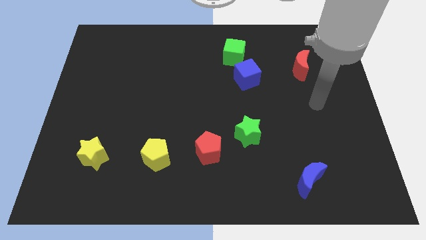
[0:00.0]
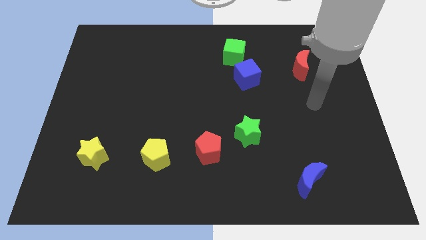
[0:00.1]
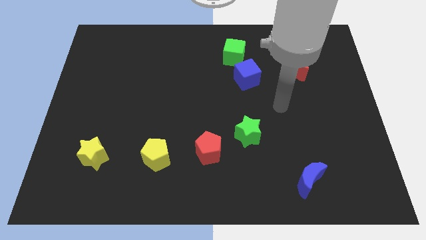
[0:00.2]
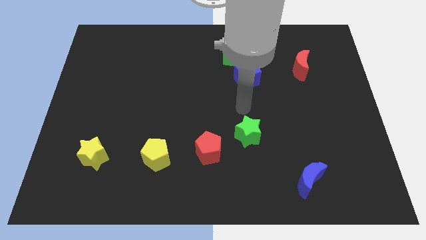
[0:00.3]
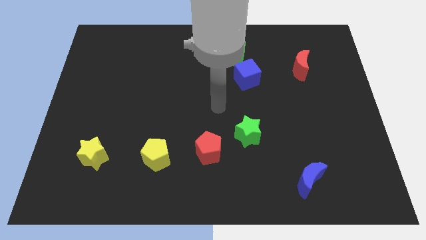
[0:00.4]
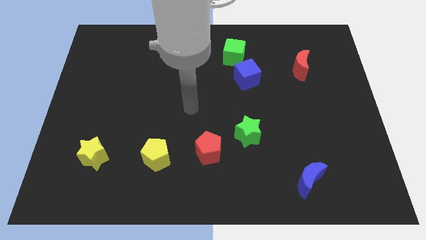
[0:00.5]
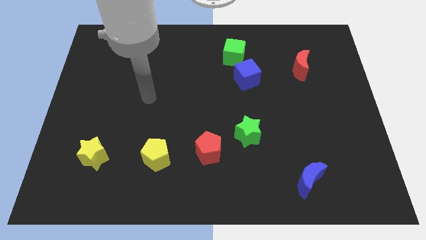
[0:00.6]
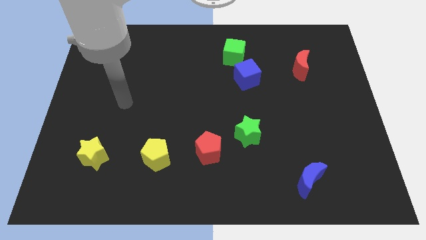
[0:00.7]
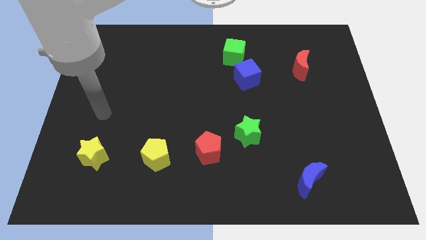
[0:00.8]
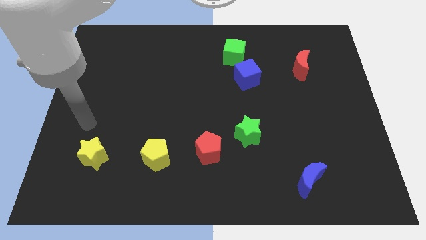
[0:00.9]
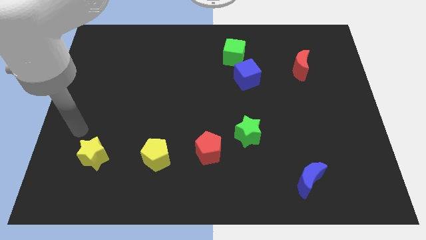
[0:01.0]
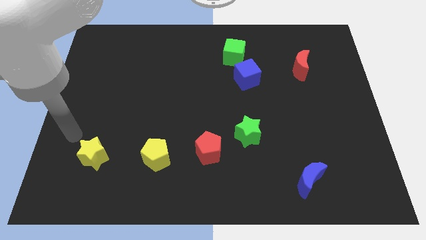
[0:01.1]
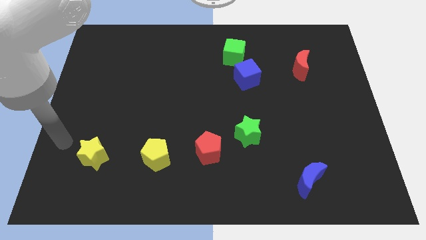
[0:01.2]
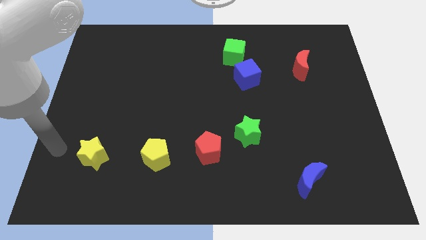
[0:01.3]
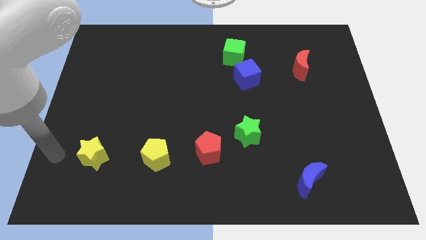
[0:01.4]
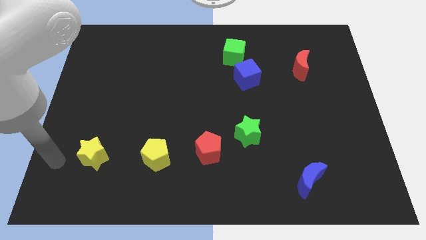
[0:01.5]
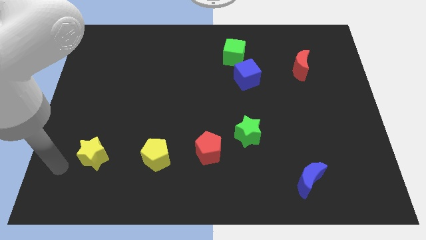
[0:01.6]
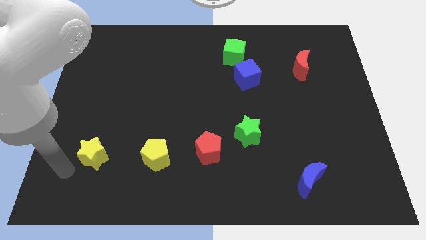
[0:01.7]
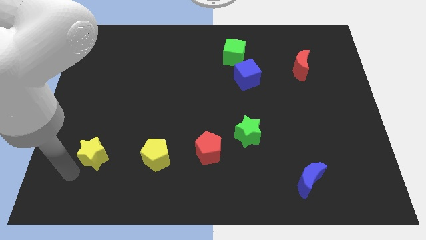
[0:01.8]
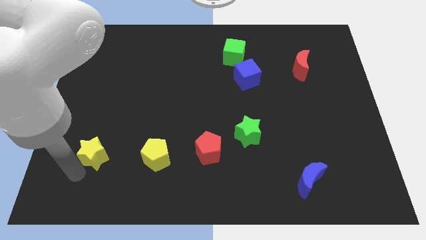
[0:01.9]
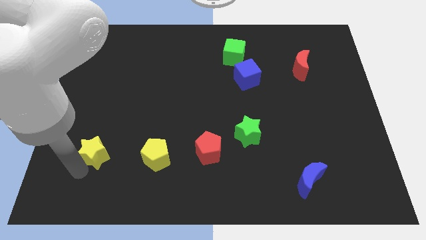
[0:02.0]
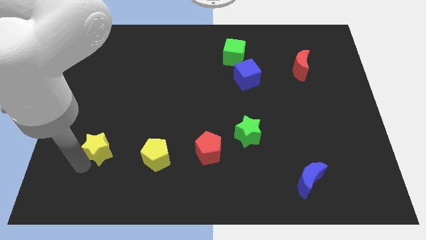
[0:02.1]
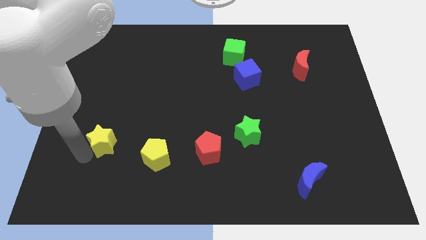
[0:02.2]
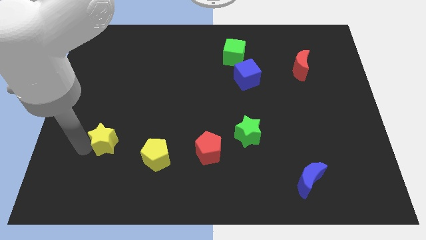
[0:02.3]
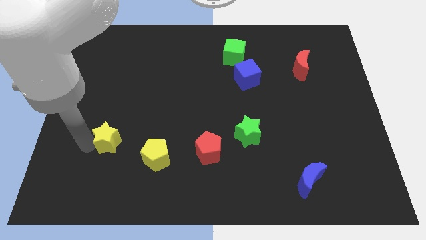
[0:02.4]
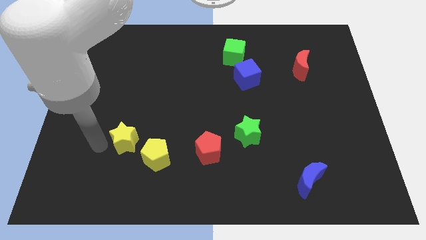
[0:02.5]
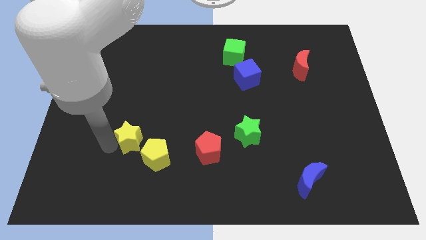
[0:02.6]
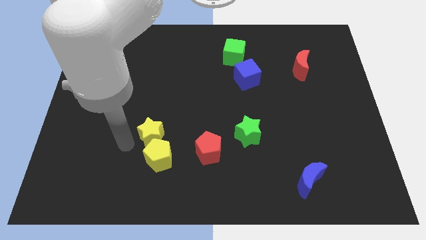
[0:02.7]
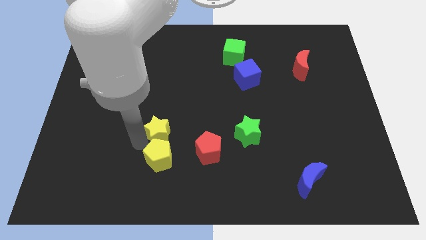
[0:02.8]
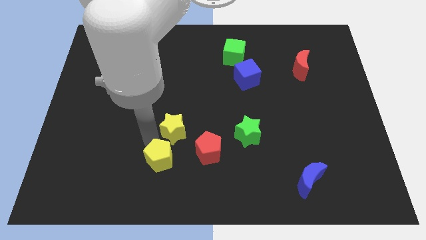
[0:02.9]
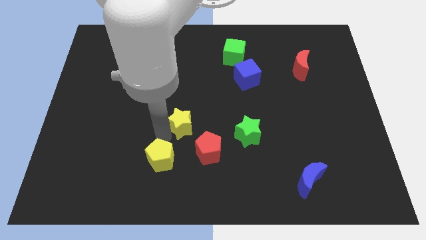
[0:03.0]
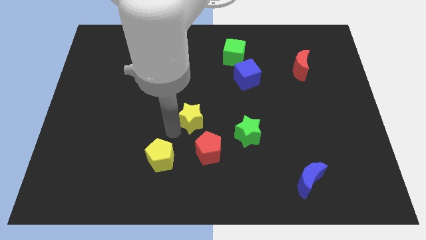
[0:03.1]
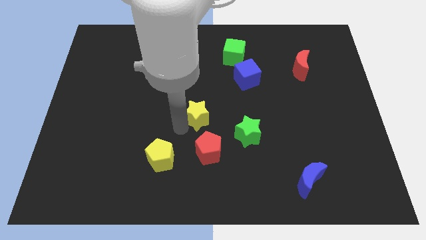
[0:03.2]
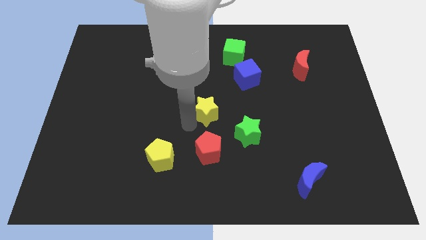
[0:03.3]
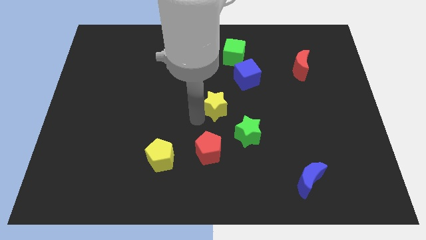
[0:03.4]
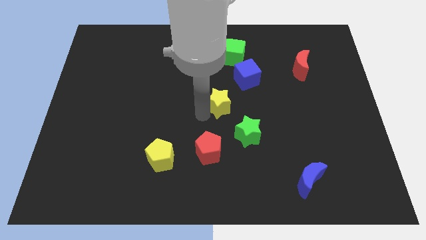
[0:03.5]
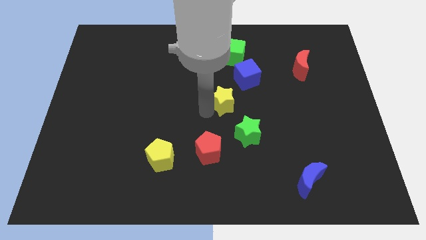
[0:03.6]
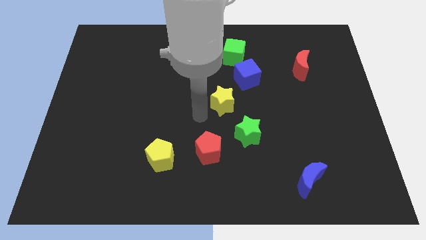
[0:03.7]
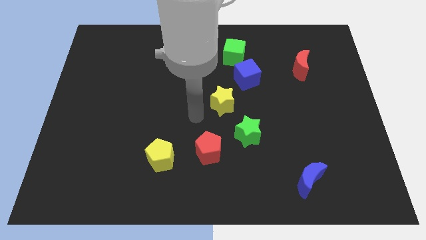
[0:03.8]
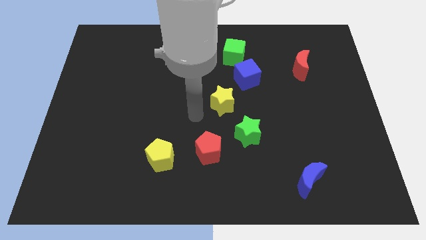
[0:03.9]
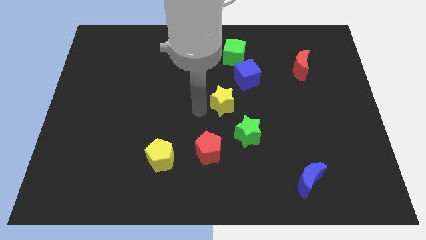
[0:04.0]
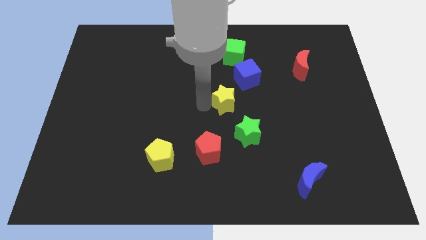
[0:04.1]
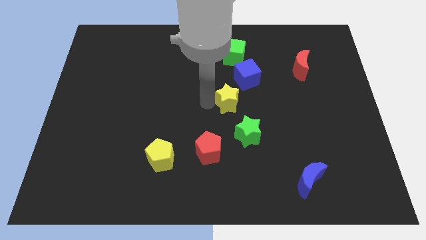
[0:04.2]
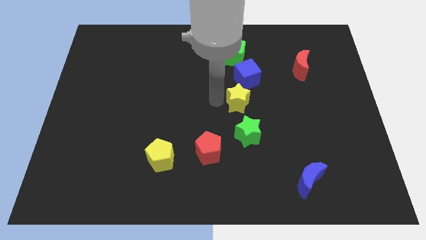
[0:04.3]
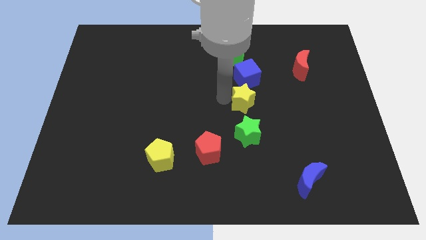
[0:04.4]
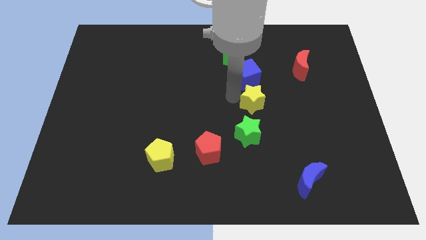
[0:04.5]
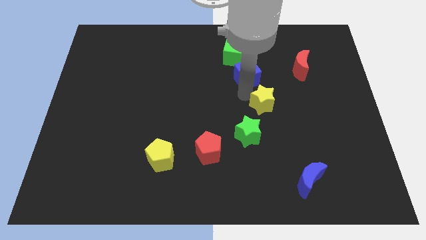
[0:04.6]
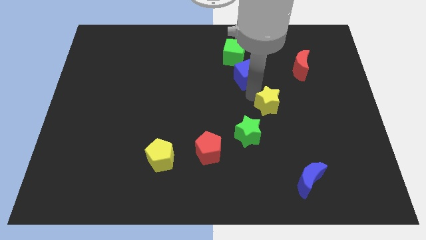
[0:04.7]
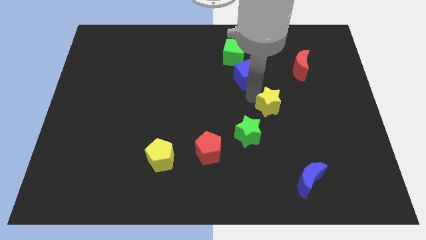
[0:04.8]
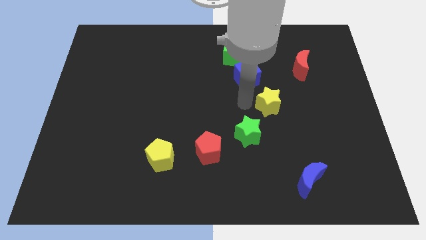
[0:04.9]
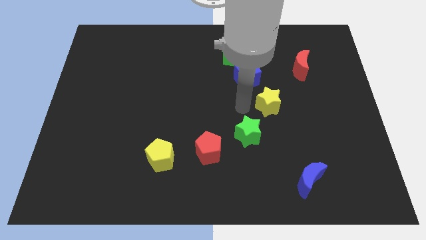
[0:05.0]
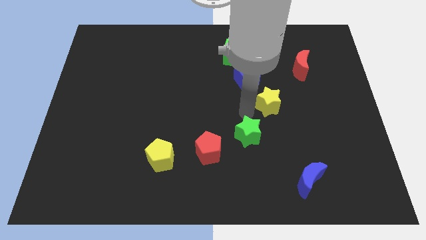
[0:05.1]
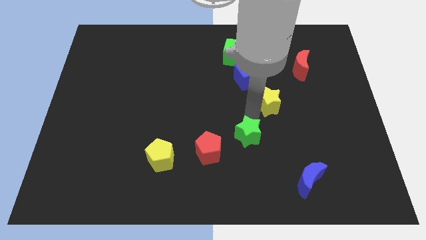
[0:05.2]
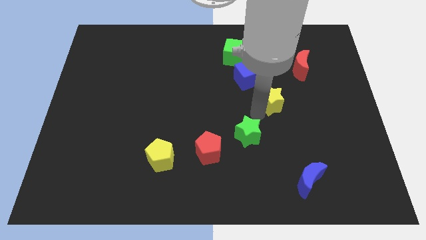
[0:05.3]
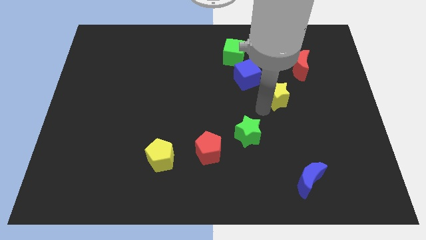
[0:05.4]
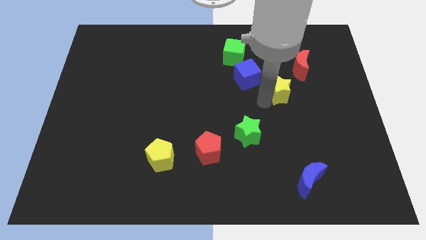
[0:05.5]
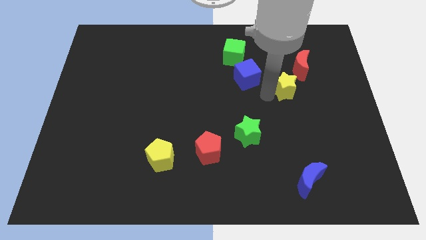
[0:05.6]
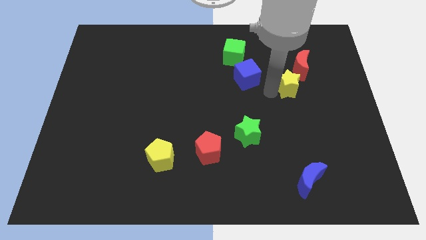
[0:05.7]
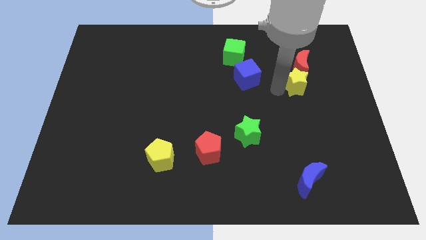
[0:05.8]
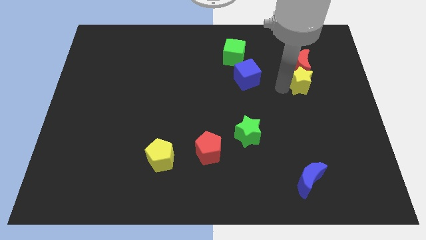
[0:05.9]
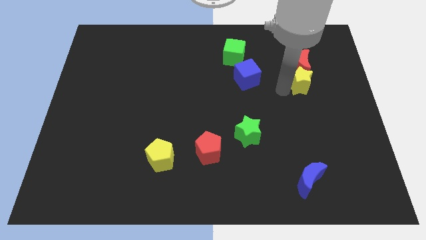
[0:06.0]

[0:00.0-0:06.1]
push the yellow star next to the red moon

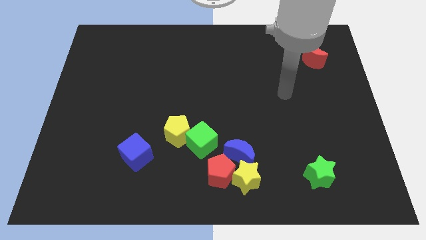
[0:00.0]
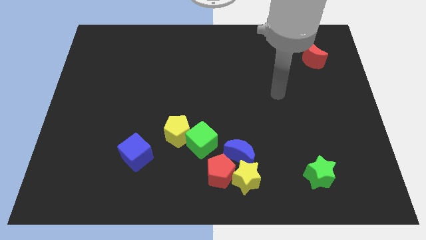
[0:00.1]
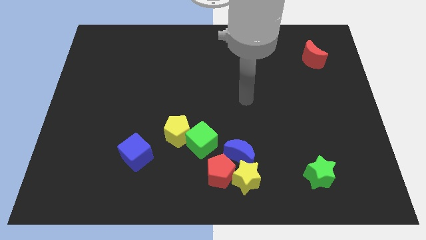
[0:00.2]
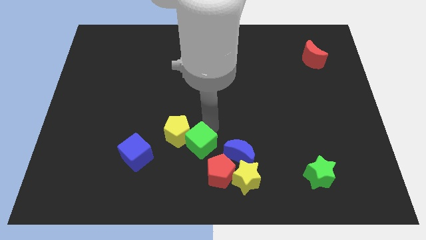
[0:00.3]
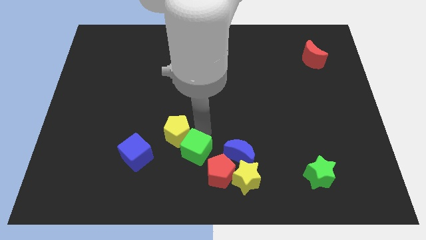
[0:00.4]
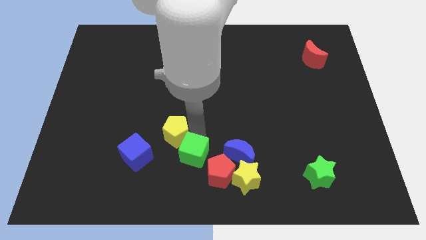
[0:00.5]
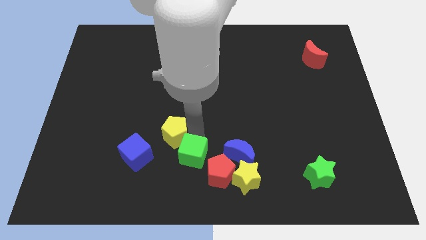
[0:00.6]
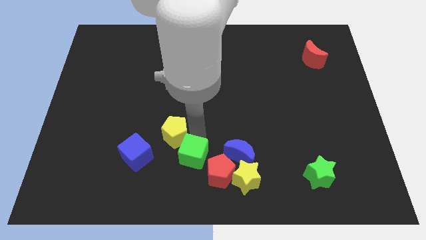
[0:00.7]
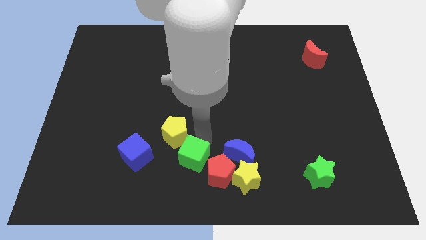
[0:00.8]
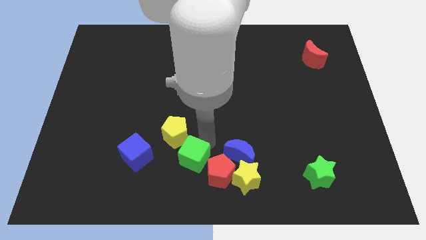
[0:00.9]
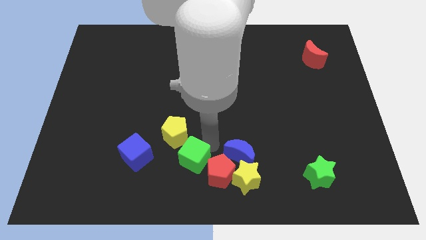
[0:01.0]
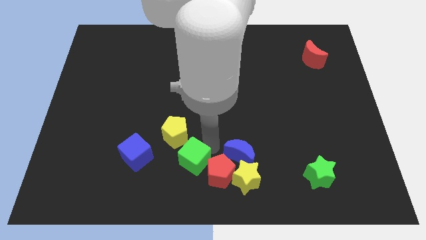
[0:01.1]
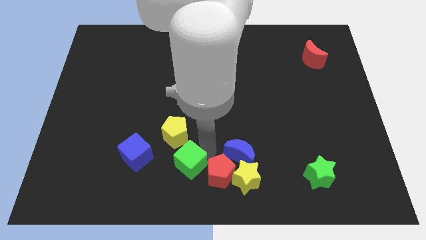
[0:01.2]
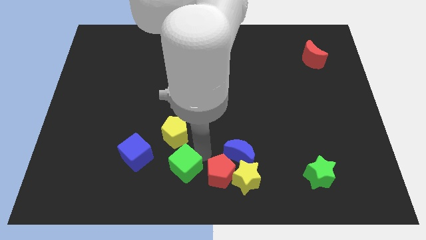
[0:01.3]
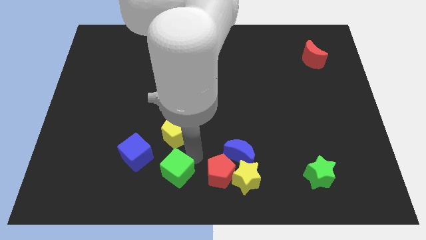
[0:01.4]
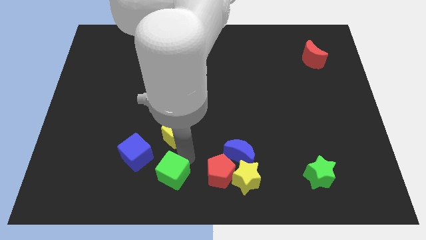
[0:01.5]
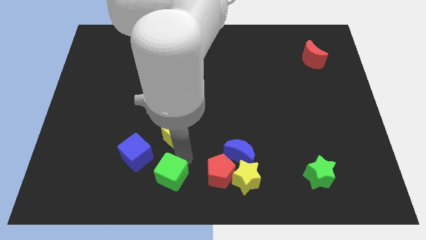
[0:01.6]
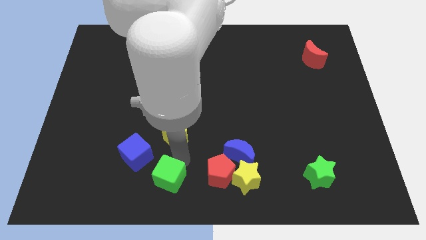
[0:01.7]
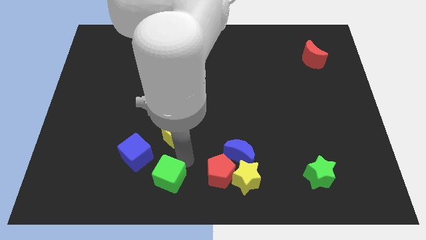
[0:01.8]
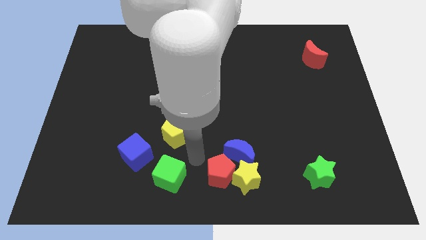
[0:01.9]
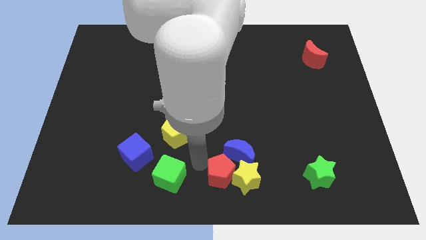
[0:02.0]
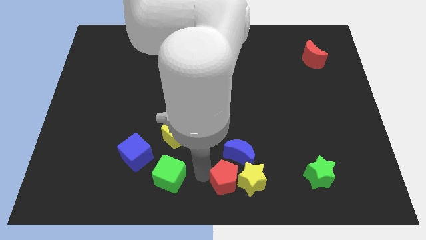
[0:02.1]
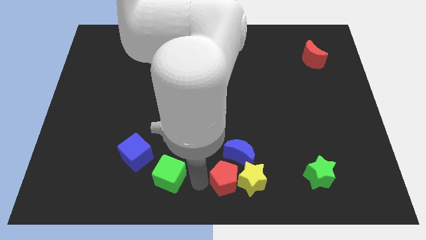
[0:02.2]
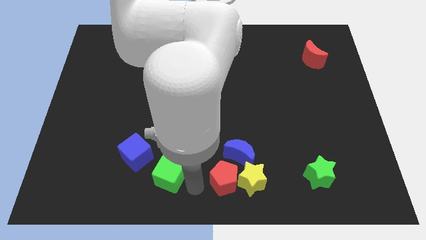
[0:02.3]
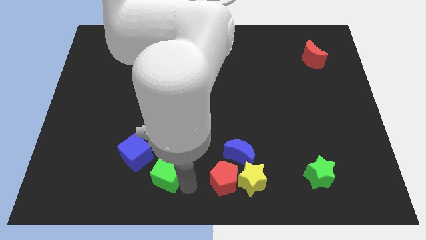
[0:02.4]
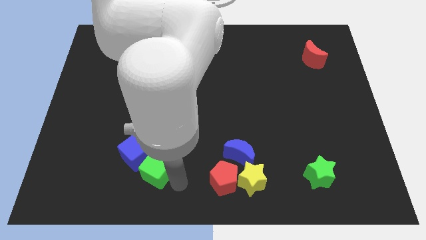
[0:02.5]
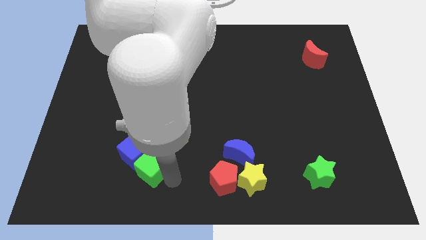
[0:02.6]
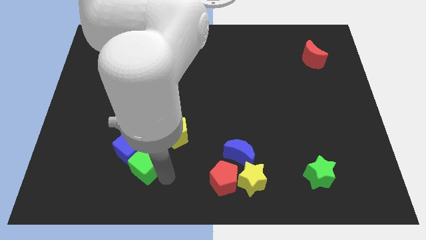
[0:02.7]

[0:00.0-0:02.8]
put the green cube towards the blue cube
